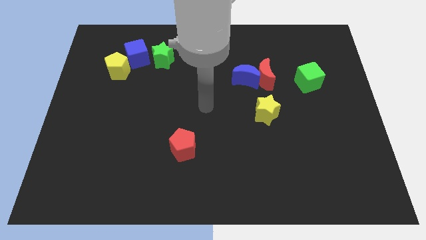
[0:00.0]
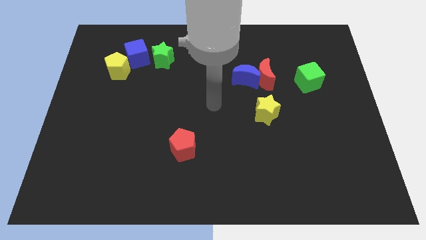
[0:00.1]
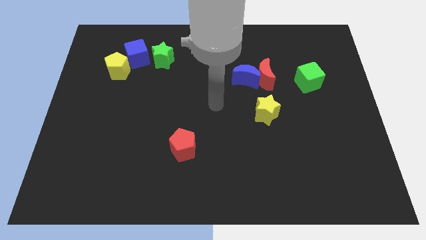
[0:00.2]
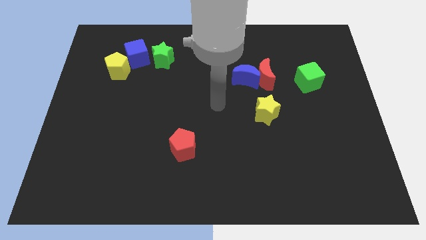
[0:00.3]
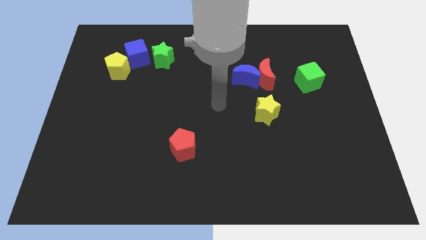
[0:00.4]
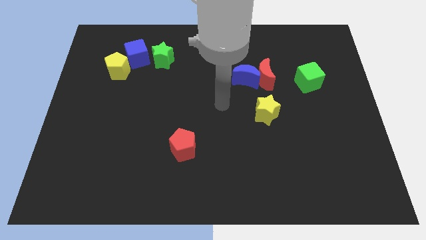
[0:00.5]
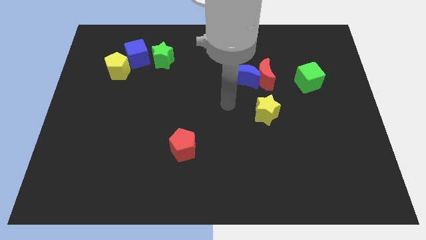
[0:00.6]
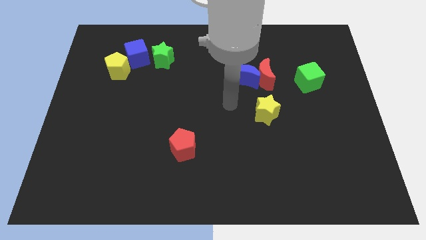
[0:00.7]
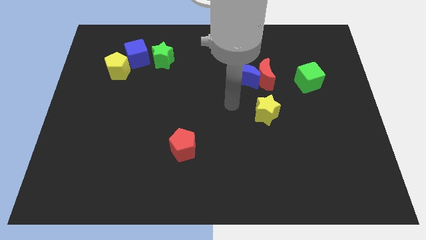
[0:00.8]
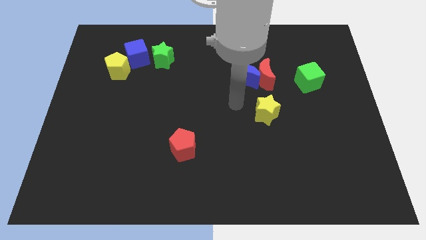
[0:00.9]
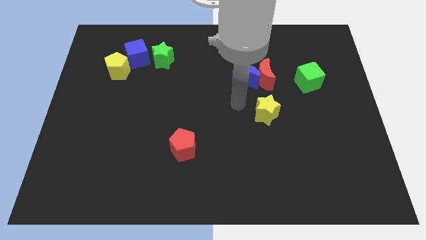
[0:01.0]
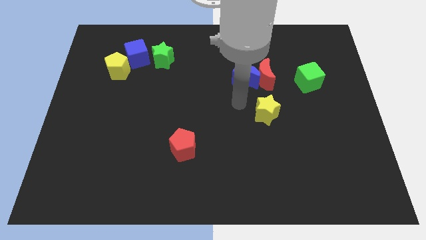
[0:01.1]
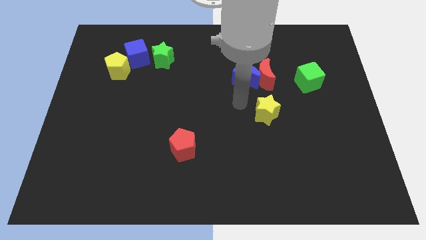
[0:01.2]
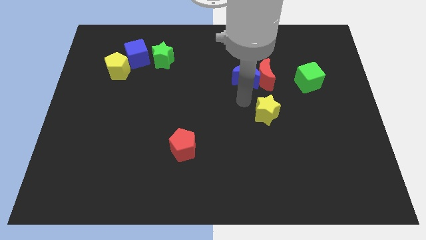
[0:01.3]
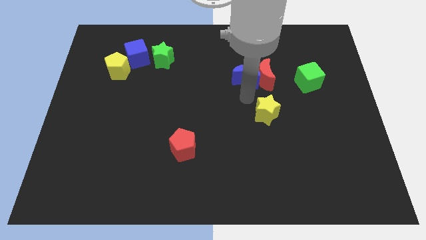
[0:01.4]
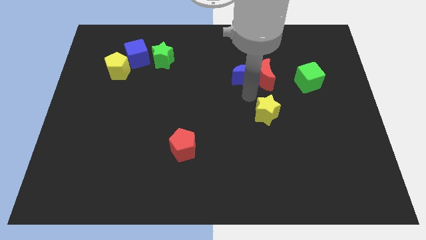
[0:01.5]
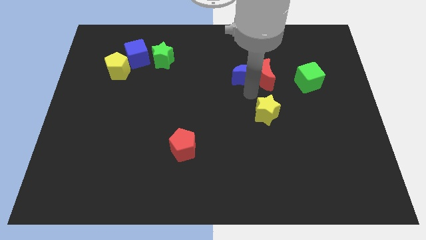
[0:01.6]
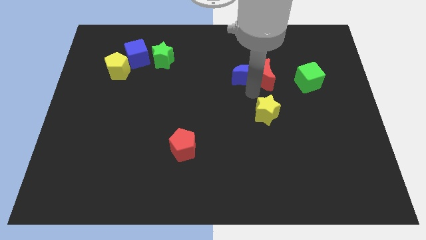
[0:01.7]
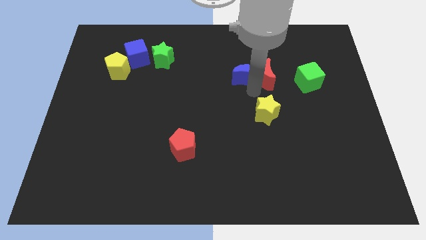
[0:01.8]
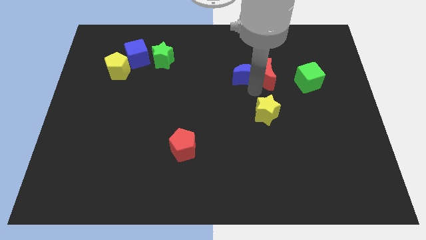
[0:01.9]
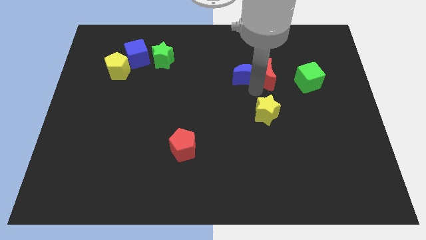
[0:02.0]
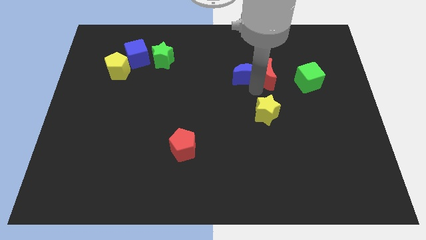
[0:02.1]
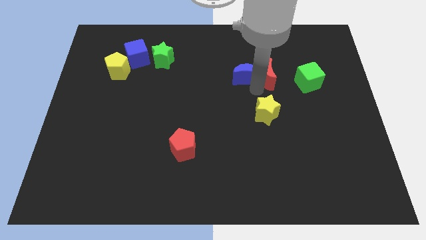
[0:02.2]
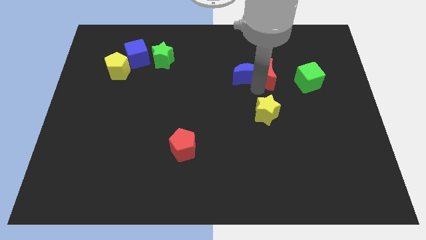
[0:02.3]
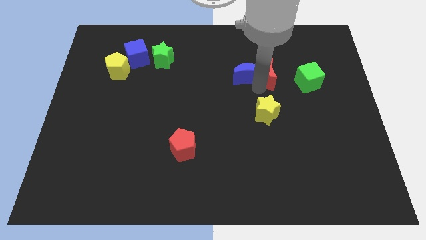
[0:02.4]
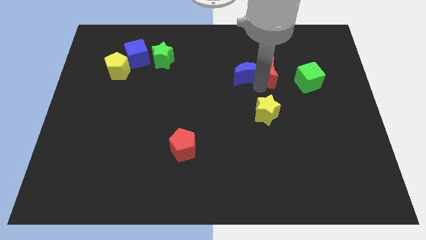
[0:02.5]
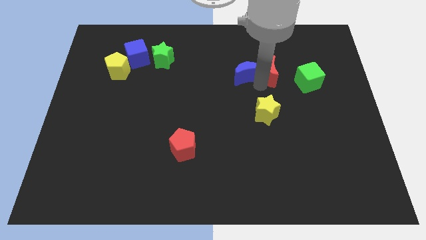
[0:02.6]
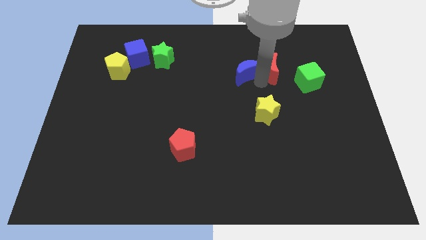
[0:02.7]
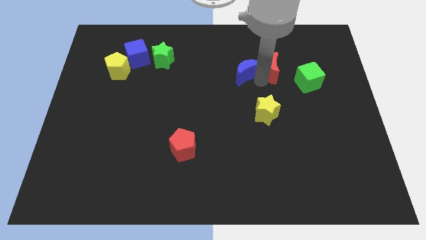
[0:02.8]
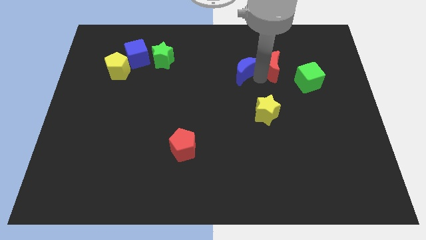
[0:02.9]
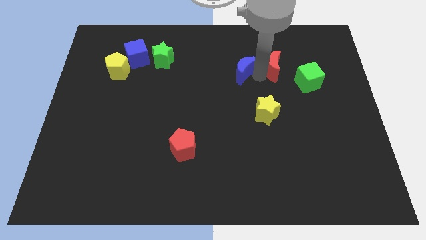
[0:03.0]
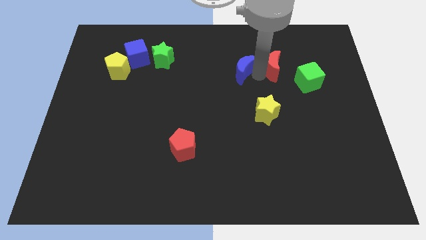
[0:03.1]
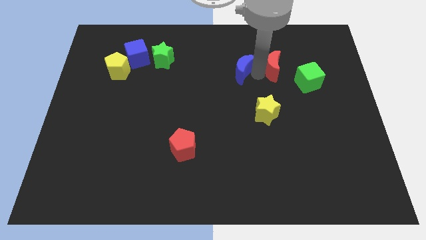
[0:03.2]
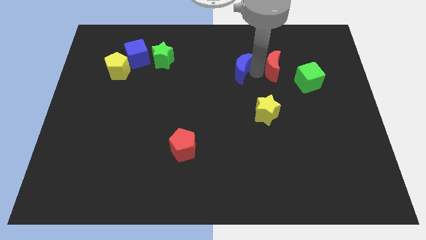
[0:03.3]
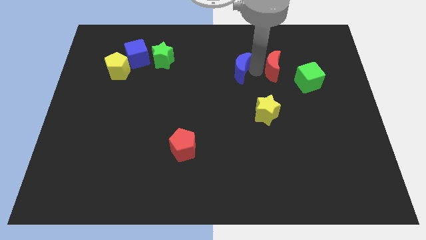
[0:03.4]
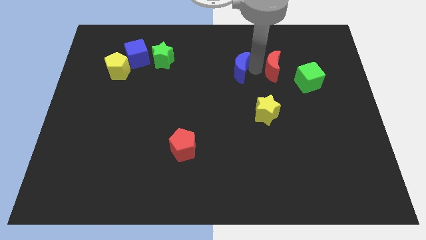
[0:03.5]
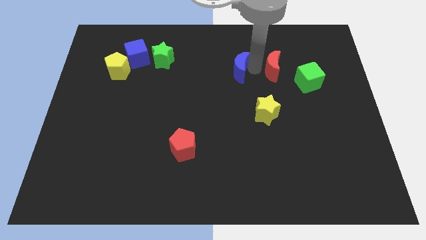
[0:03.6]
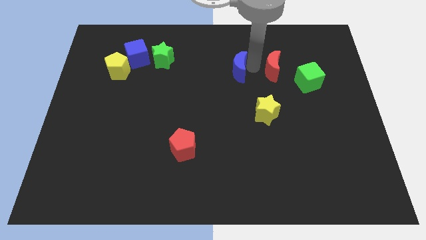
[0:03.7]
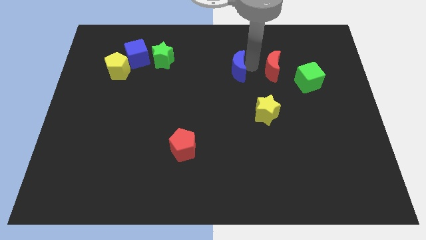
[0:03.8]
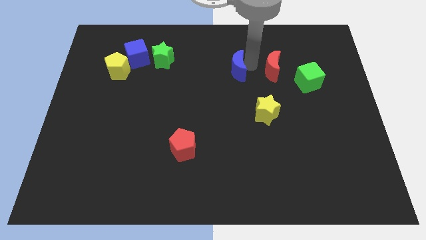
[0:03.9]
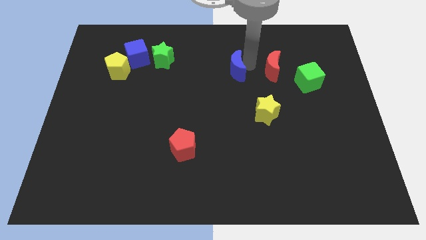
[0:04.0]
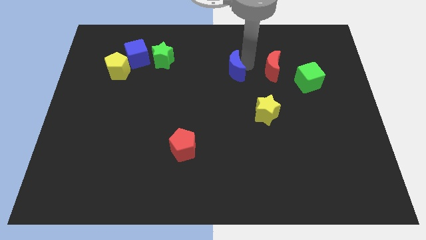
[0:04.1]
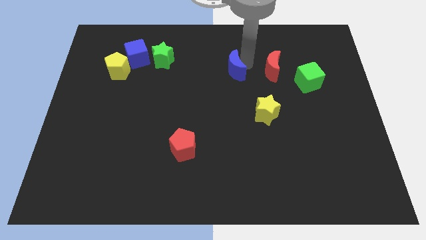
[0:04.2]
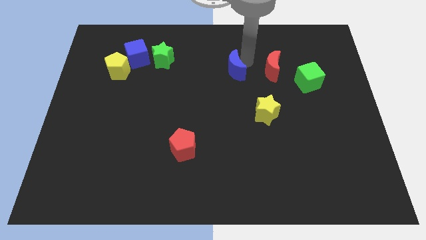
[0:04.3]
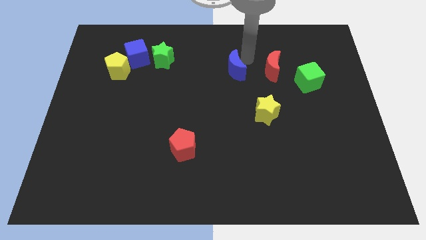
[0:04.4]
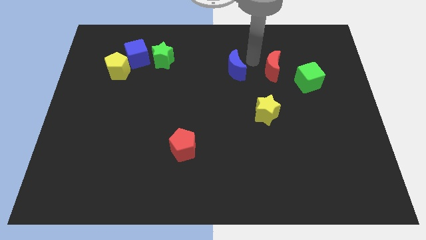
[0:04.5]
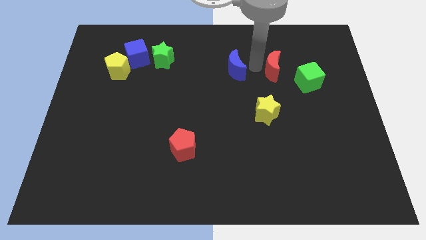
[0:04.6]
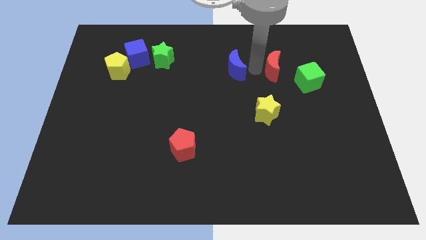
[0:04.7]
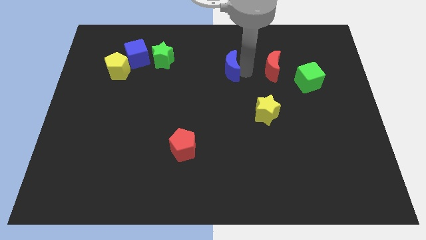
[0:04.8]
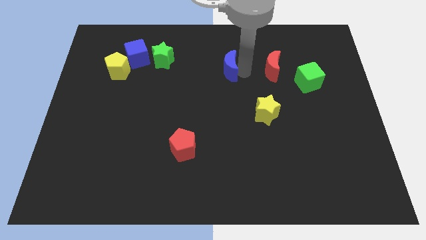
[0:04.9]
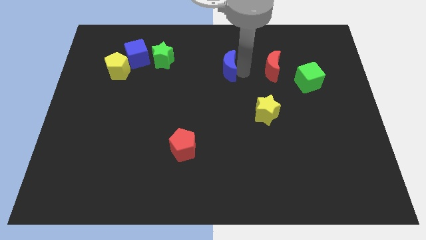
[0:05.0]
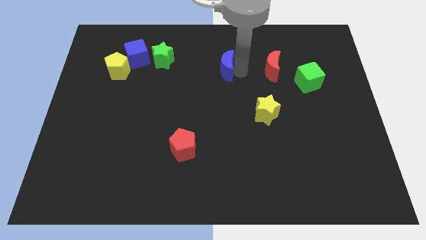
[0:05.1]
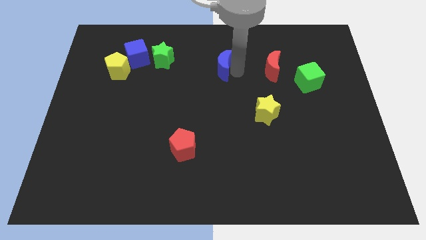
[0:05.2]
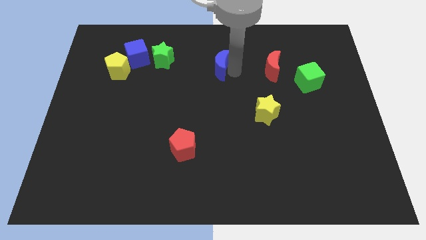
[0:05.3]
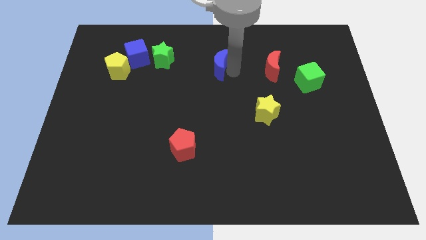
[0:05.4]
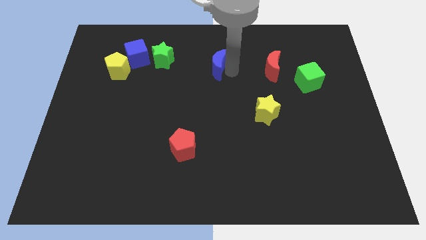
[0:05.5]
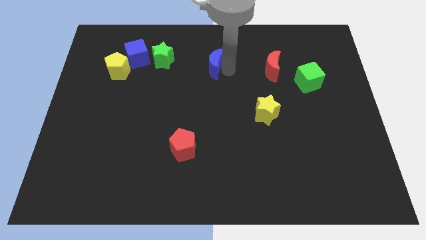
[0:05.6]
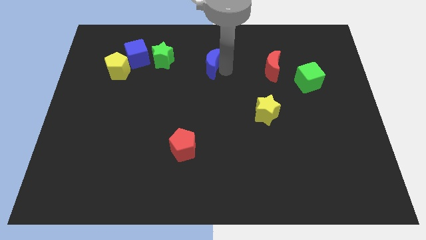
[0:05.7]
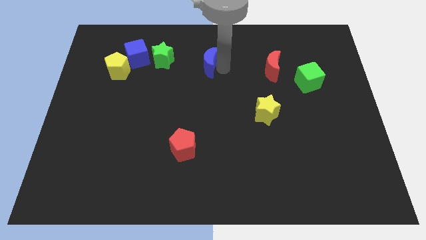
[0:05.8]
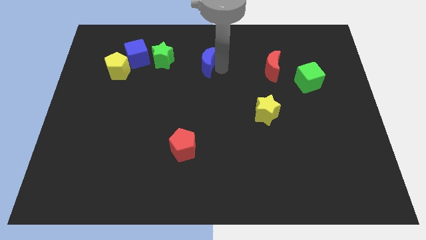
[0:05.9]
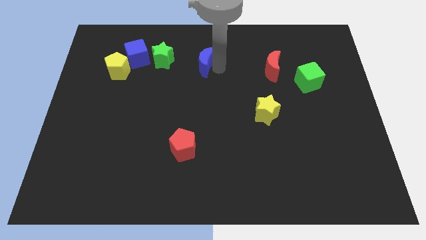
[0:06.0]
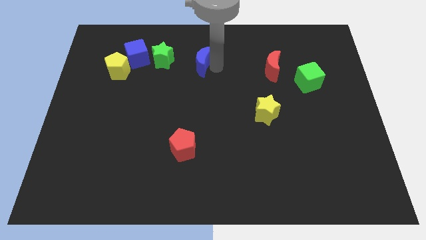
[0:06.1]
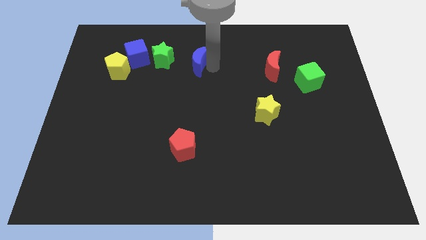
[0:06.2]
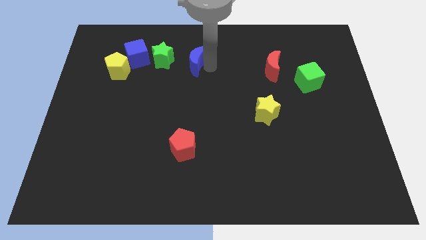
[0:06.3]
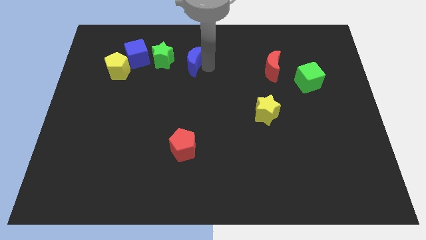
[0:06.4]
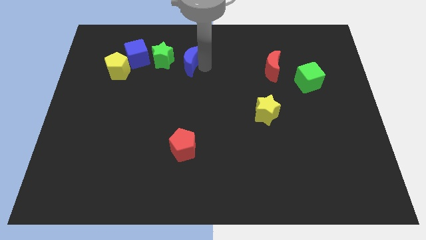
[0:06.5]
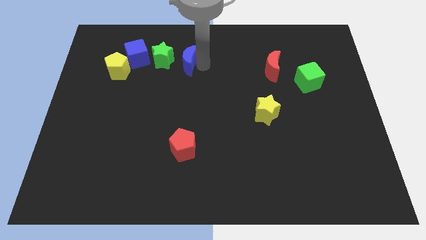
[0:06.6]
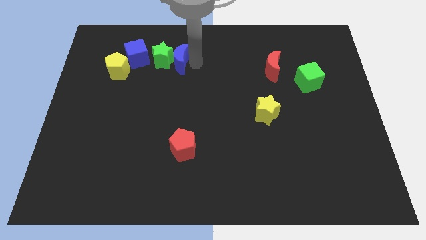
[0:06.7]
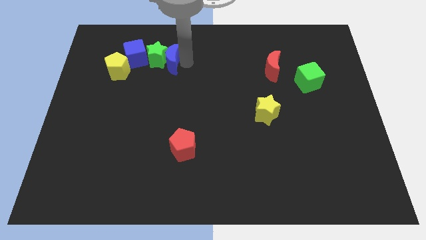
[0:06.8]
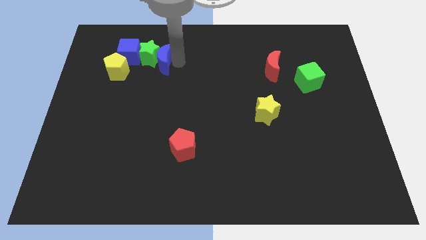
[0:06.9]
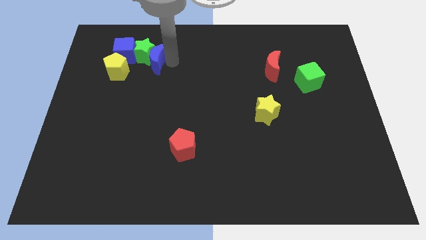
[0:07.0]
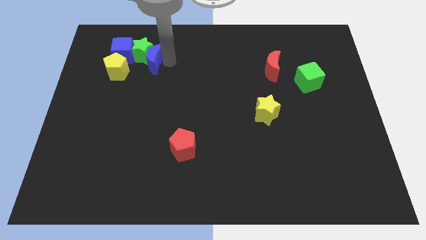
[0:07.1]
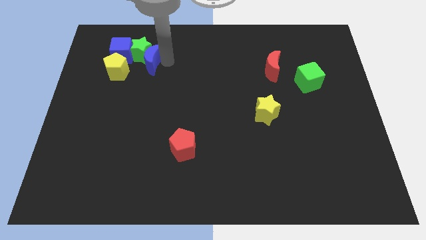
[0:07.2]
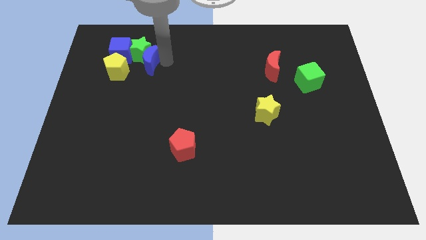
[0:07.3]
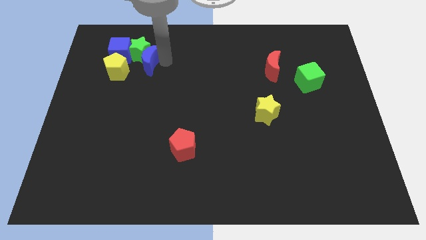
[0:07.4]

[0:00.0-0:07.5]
push the blue crescent into the green star

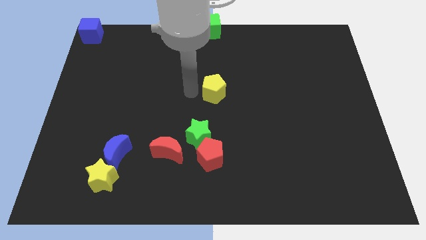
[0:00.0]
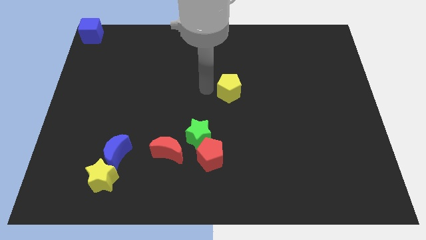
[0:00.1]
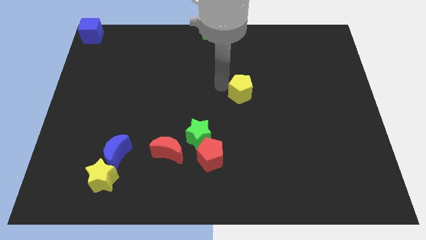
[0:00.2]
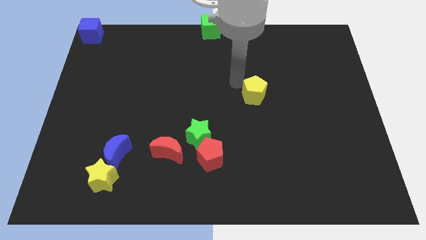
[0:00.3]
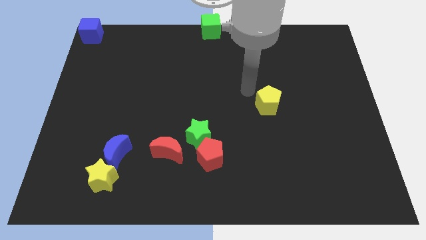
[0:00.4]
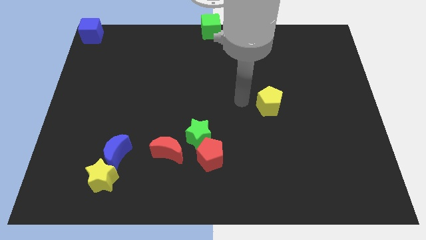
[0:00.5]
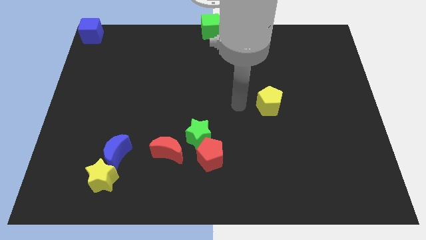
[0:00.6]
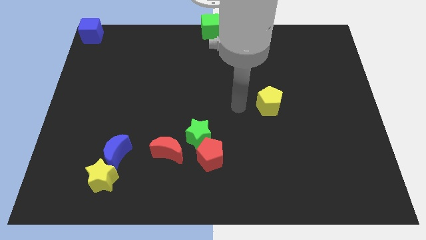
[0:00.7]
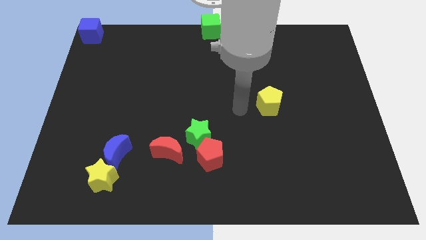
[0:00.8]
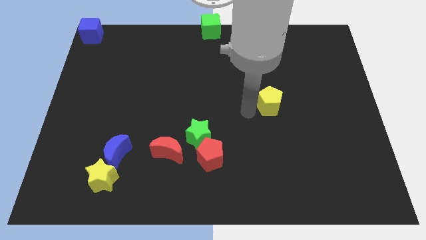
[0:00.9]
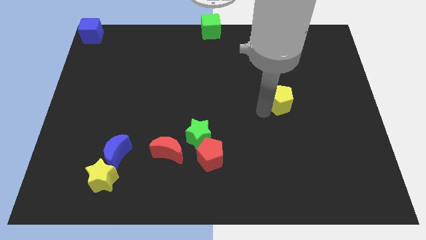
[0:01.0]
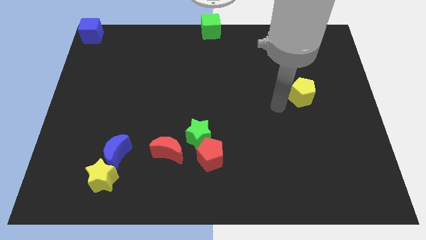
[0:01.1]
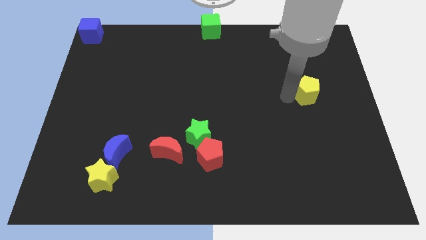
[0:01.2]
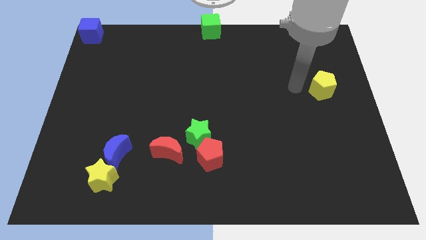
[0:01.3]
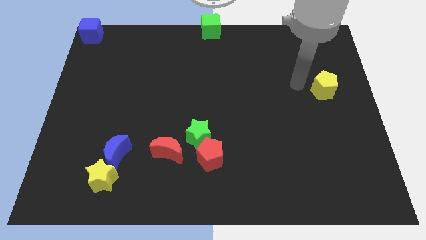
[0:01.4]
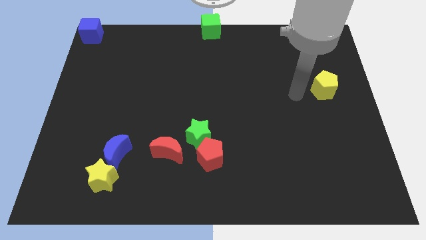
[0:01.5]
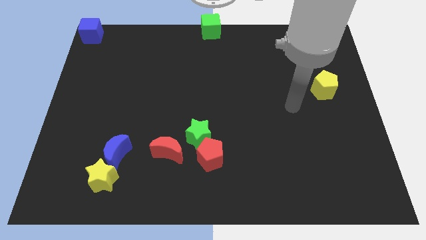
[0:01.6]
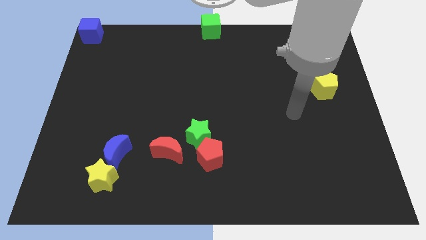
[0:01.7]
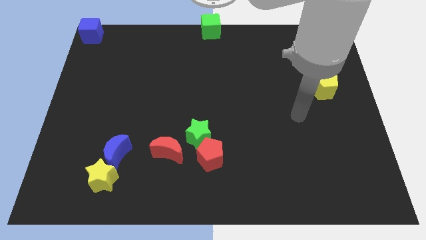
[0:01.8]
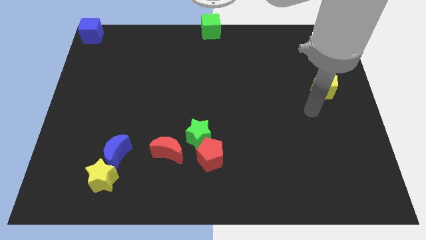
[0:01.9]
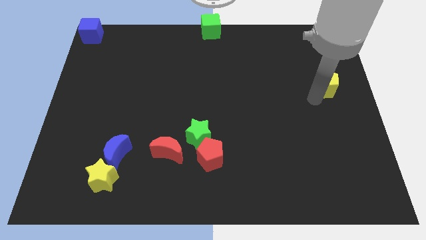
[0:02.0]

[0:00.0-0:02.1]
push the yellow pentagon to the right side of the board
